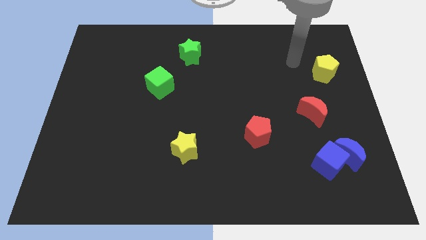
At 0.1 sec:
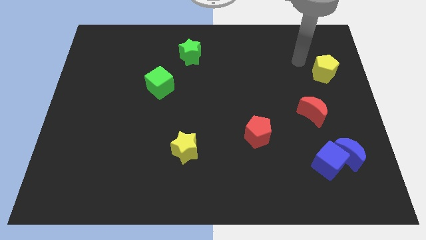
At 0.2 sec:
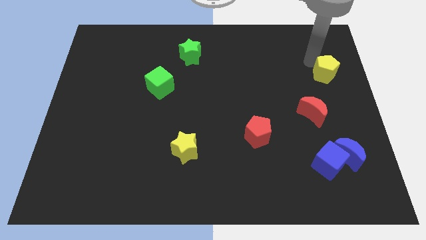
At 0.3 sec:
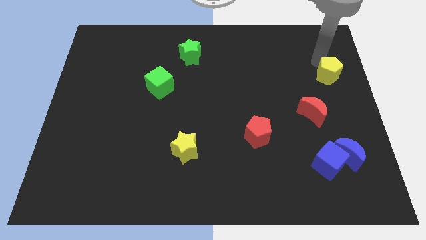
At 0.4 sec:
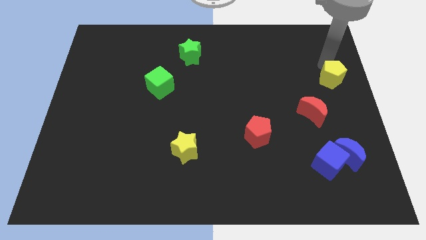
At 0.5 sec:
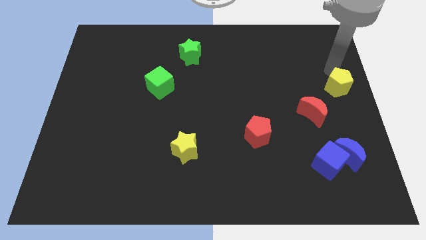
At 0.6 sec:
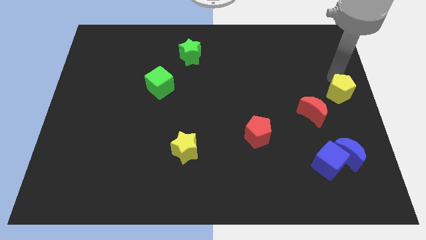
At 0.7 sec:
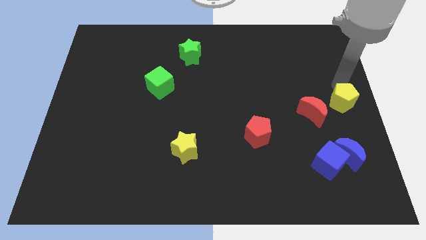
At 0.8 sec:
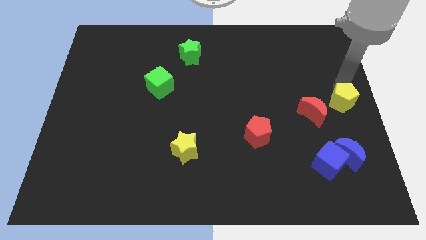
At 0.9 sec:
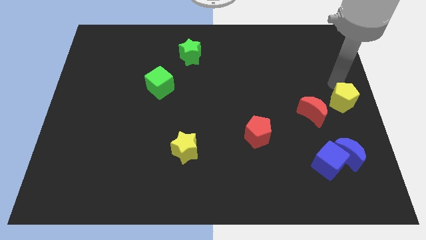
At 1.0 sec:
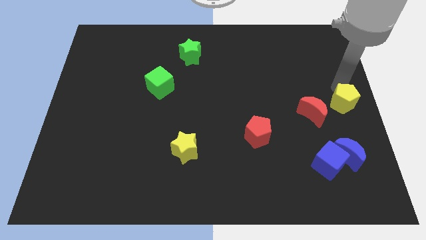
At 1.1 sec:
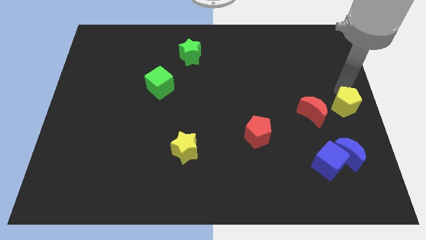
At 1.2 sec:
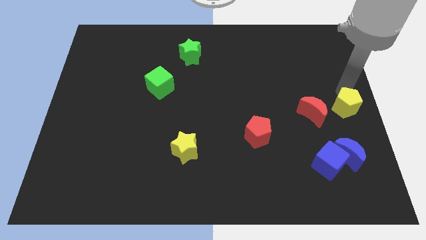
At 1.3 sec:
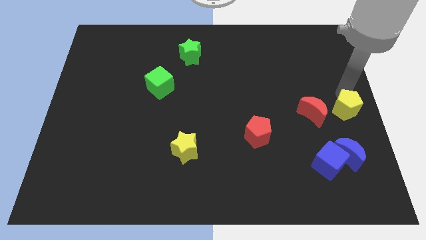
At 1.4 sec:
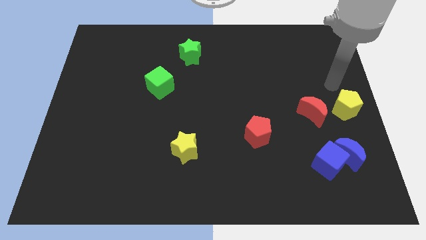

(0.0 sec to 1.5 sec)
place the yellow pentagon right to the red moon

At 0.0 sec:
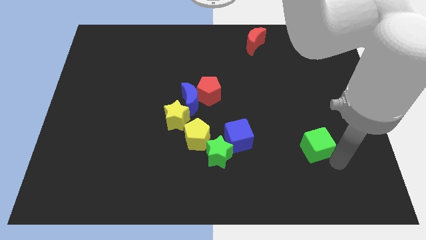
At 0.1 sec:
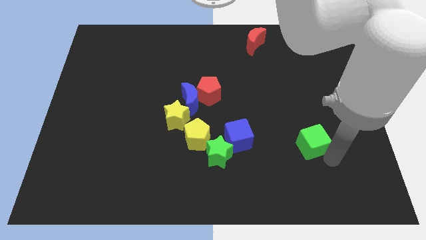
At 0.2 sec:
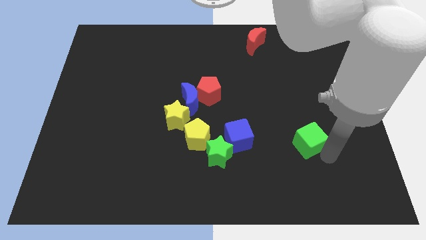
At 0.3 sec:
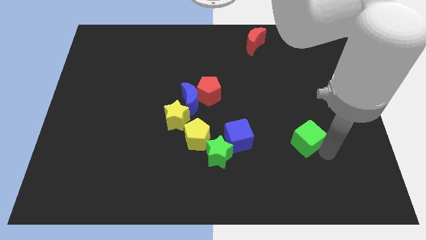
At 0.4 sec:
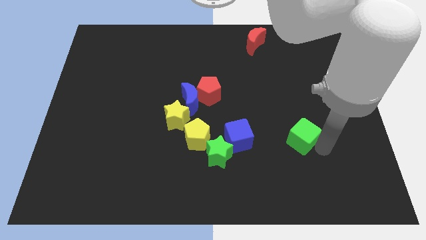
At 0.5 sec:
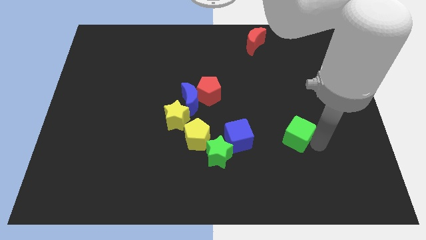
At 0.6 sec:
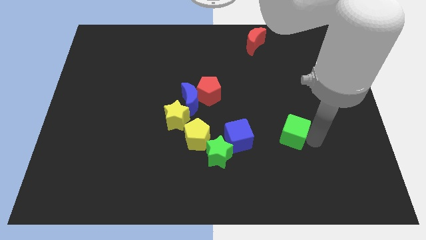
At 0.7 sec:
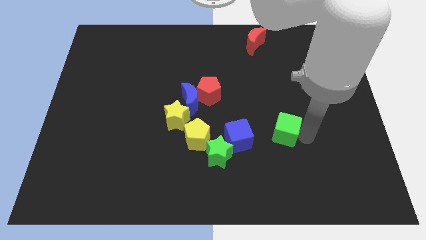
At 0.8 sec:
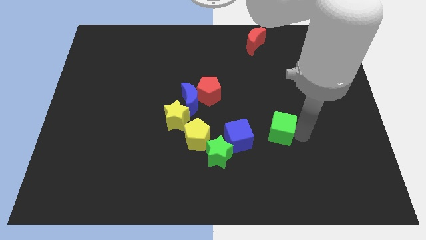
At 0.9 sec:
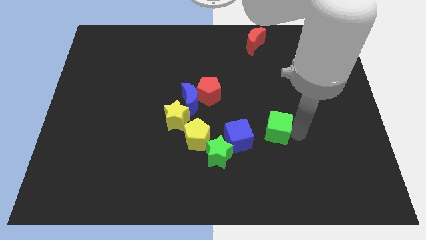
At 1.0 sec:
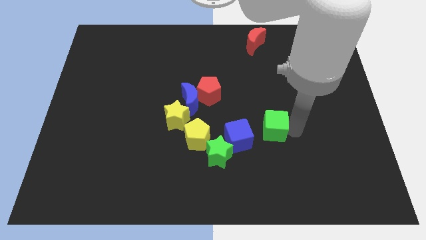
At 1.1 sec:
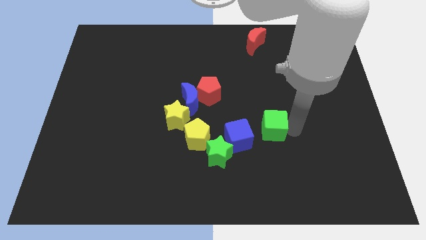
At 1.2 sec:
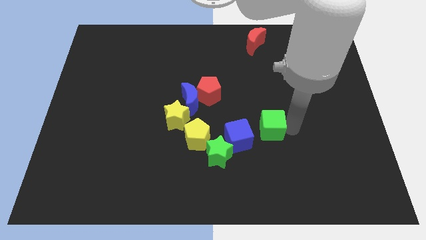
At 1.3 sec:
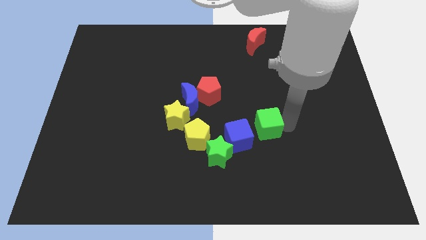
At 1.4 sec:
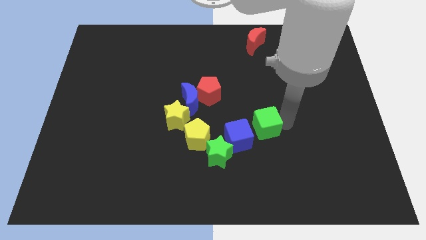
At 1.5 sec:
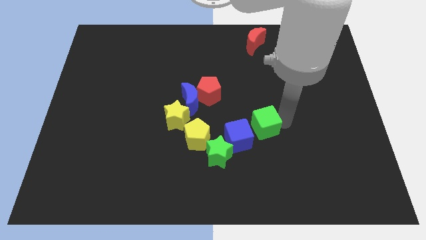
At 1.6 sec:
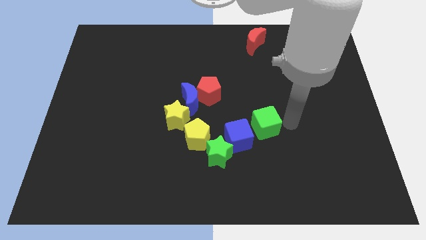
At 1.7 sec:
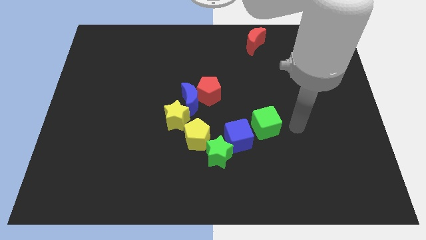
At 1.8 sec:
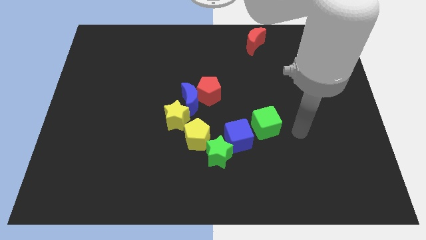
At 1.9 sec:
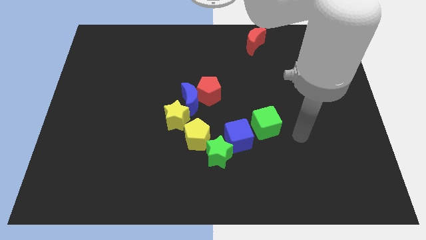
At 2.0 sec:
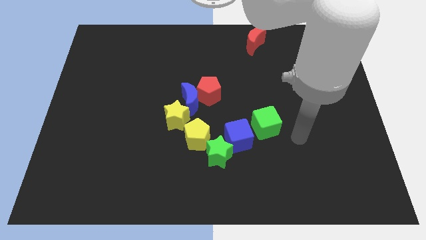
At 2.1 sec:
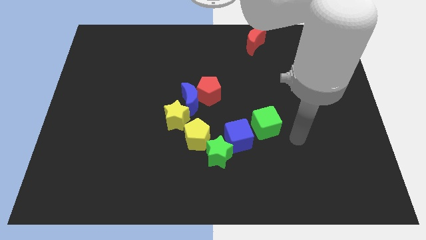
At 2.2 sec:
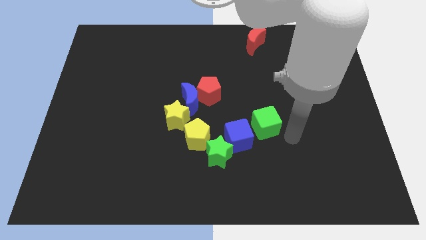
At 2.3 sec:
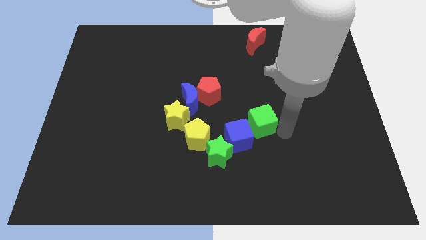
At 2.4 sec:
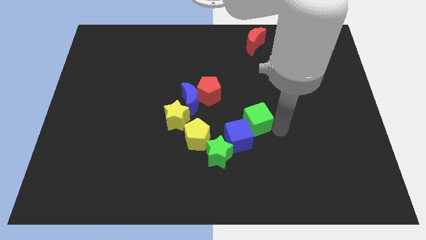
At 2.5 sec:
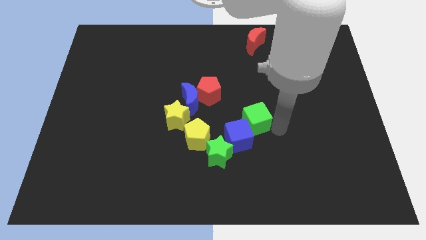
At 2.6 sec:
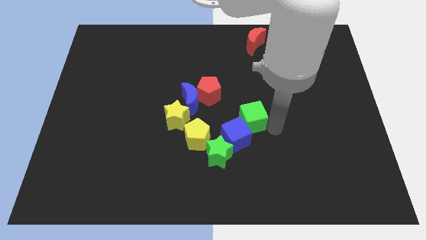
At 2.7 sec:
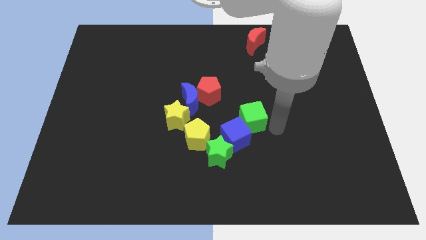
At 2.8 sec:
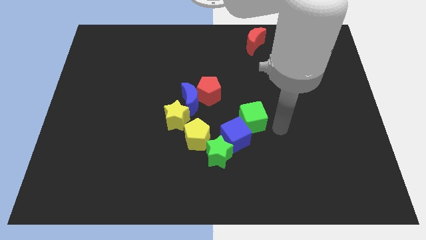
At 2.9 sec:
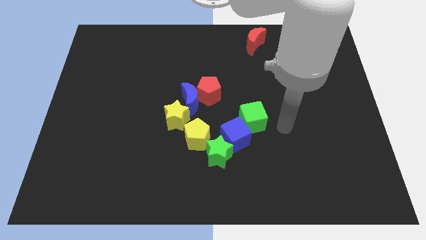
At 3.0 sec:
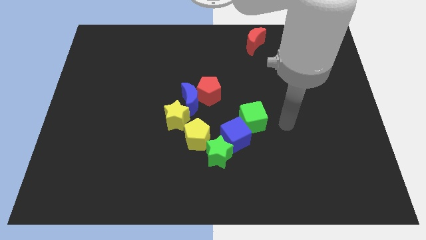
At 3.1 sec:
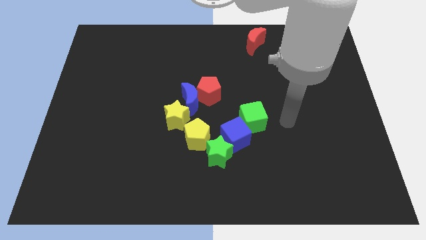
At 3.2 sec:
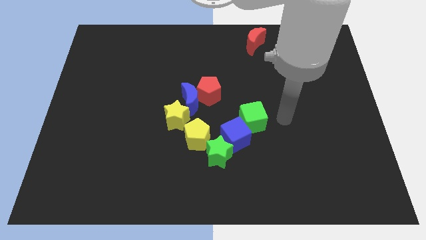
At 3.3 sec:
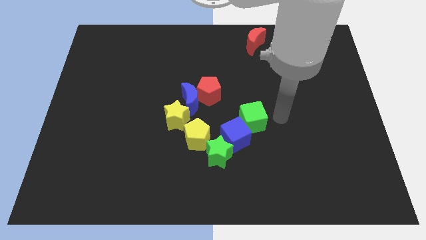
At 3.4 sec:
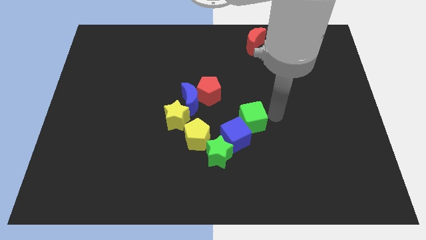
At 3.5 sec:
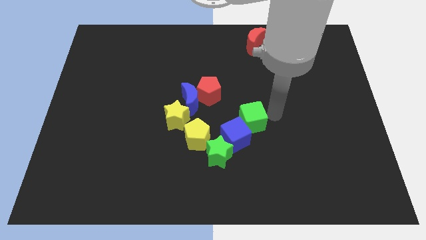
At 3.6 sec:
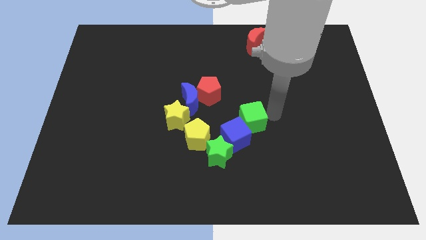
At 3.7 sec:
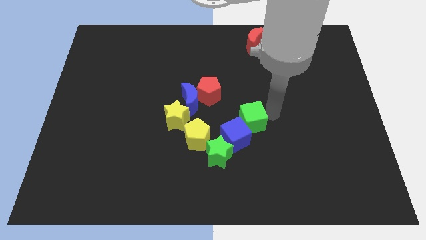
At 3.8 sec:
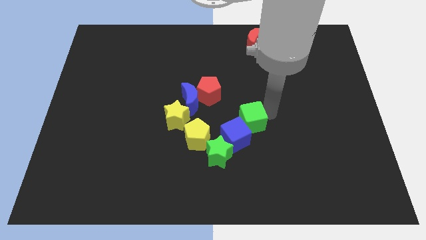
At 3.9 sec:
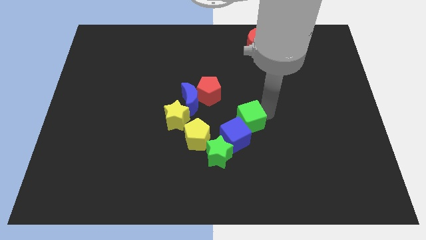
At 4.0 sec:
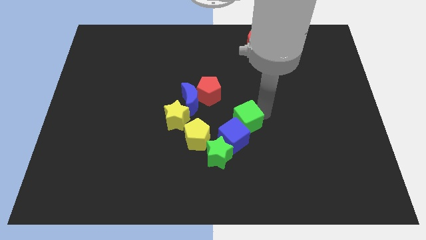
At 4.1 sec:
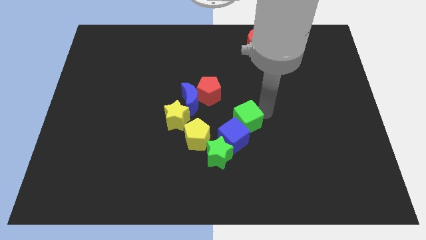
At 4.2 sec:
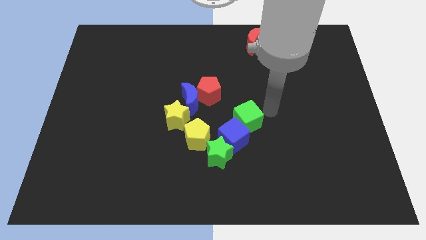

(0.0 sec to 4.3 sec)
slightly push the green star and blue cube with the green cube towards the bottom center of the board

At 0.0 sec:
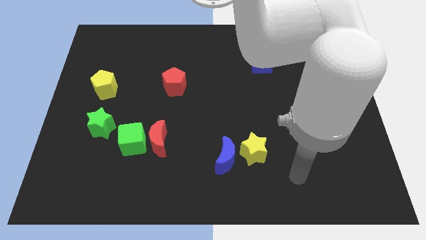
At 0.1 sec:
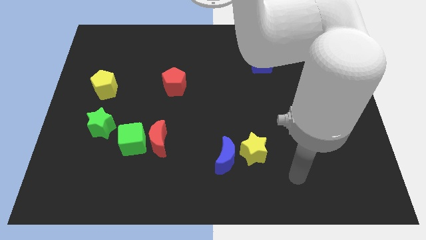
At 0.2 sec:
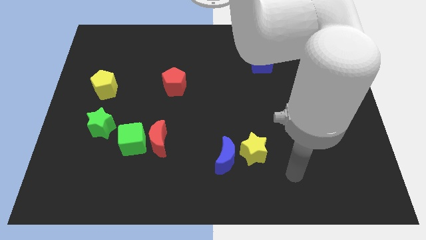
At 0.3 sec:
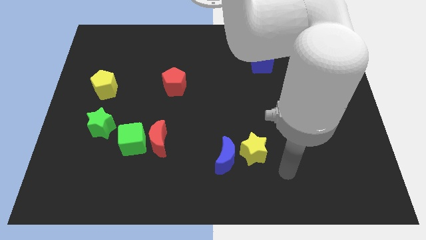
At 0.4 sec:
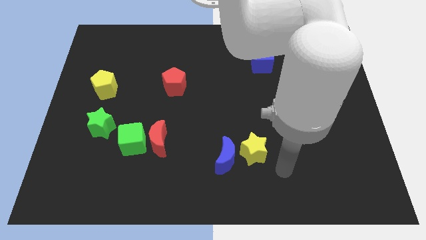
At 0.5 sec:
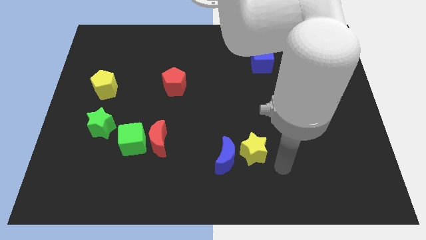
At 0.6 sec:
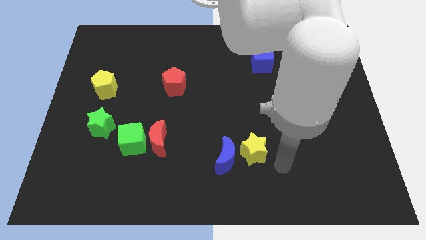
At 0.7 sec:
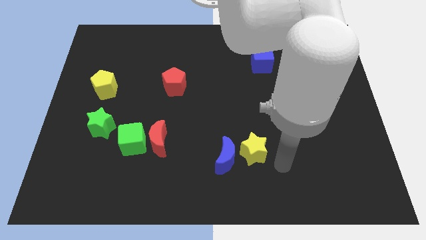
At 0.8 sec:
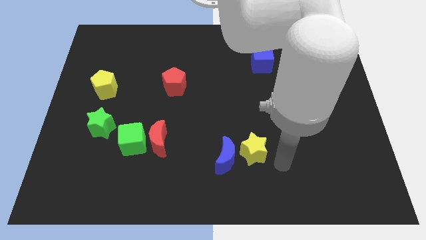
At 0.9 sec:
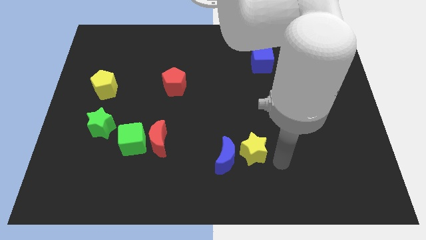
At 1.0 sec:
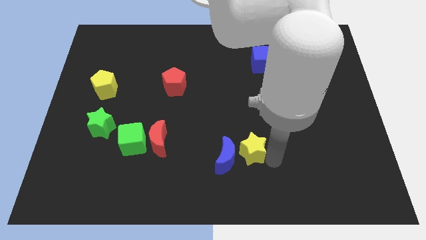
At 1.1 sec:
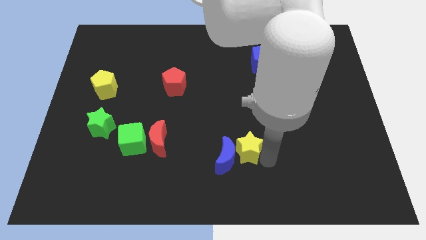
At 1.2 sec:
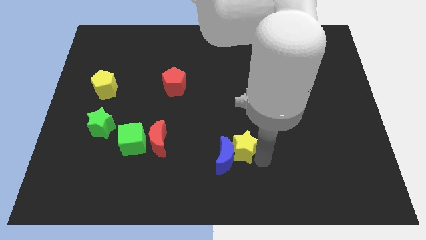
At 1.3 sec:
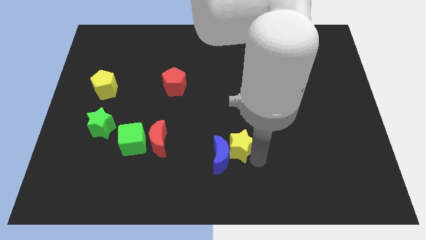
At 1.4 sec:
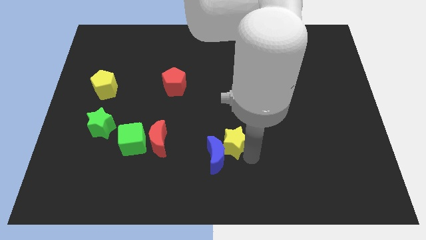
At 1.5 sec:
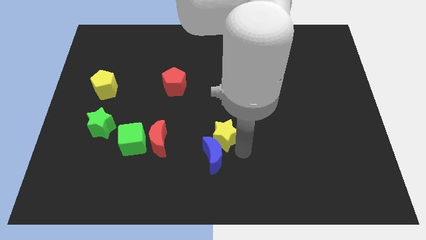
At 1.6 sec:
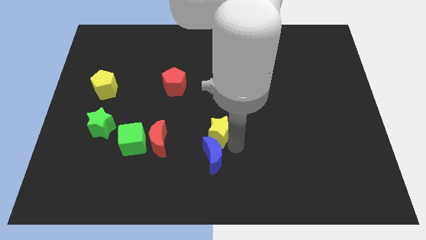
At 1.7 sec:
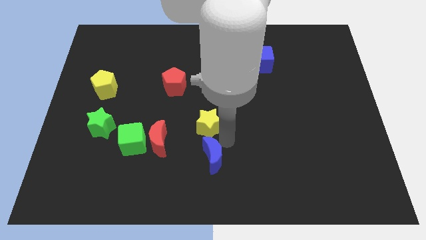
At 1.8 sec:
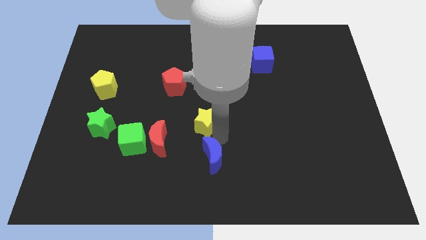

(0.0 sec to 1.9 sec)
move the yellow star to the top side of the blue moon

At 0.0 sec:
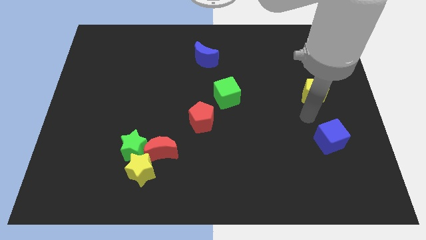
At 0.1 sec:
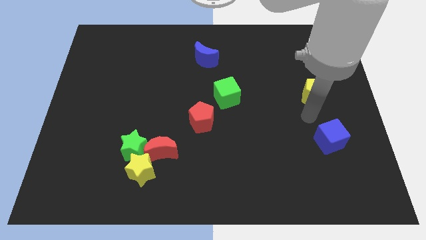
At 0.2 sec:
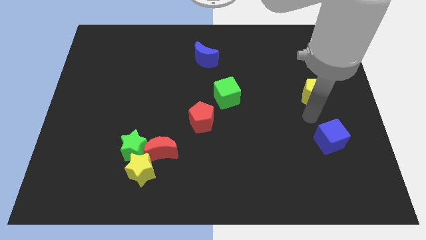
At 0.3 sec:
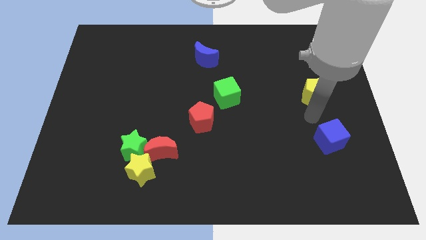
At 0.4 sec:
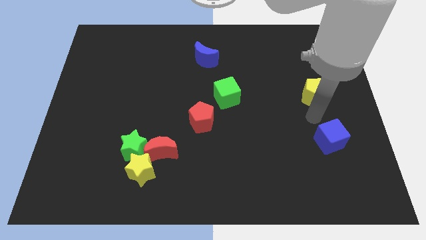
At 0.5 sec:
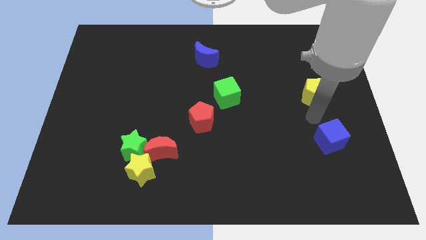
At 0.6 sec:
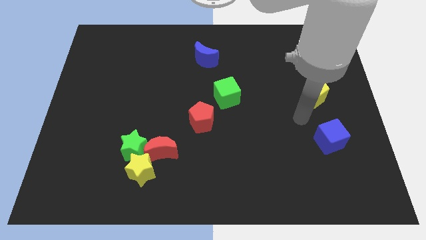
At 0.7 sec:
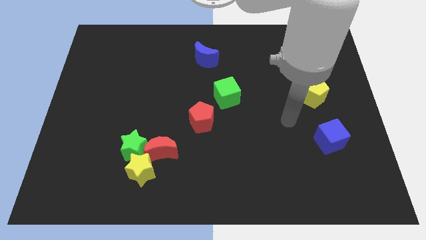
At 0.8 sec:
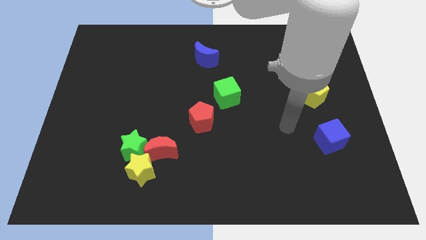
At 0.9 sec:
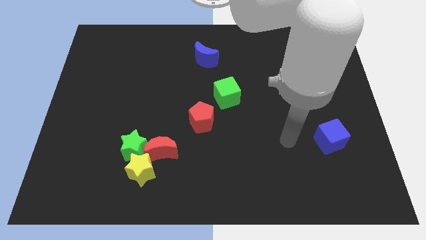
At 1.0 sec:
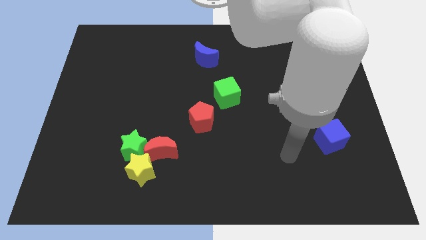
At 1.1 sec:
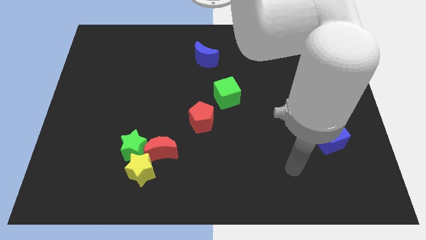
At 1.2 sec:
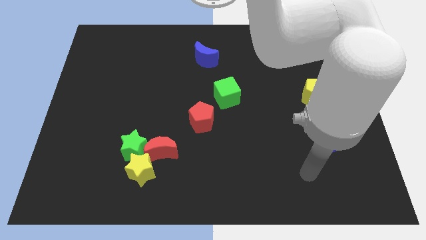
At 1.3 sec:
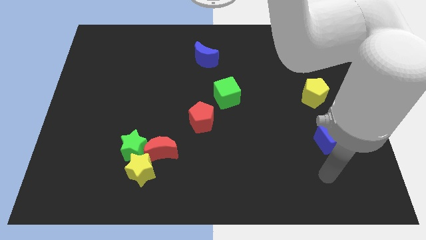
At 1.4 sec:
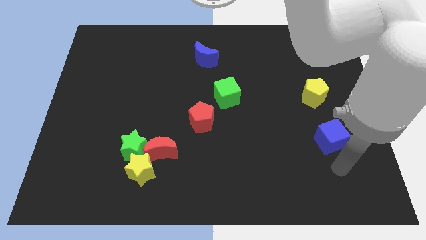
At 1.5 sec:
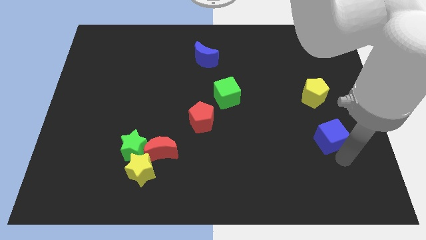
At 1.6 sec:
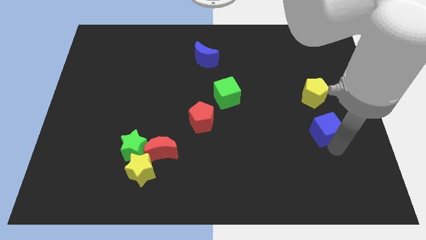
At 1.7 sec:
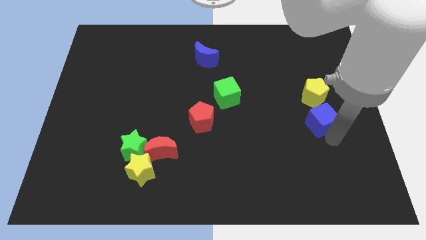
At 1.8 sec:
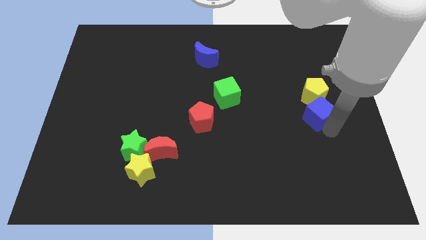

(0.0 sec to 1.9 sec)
push the blue cube into yellow pentagon at the bottom
